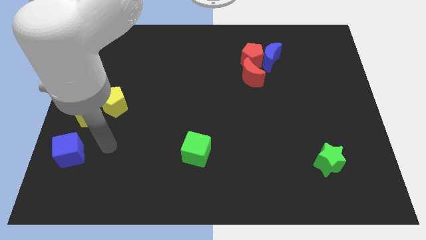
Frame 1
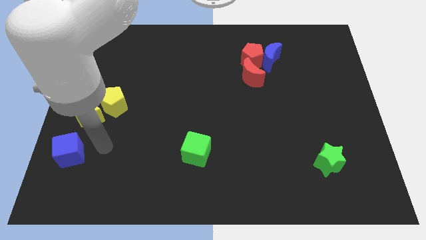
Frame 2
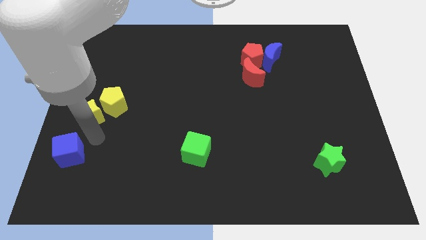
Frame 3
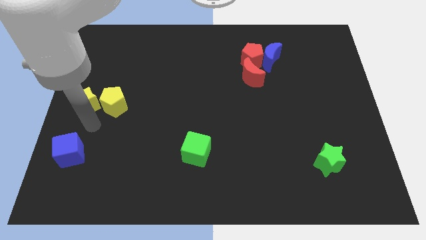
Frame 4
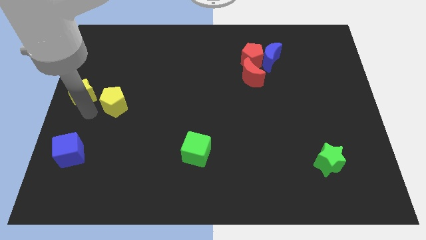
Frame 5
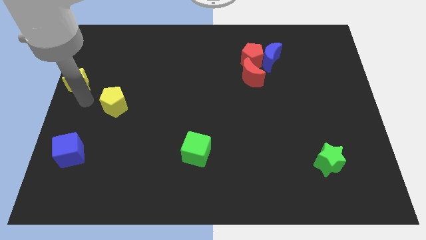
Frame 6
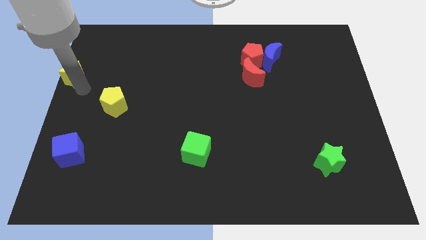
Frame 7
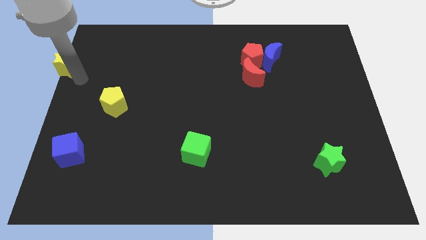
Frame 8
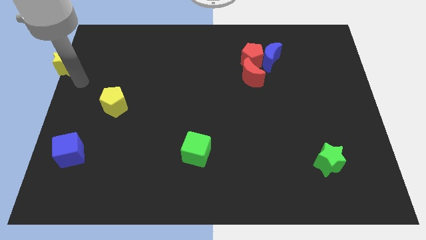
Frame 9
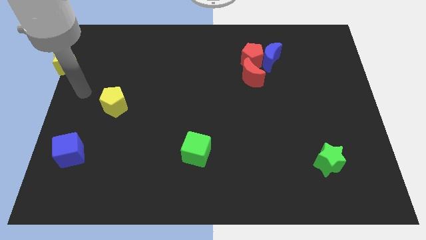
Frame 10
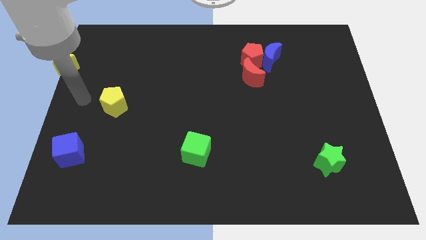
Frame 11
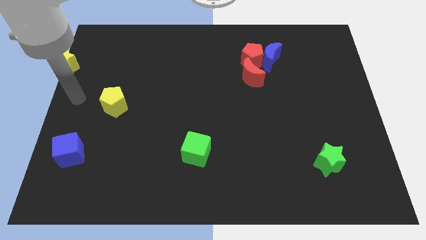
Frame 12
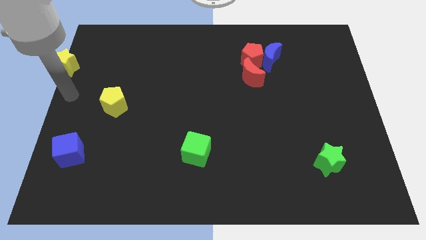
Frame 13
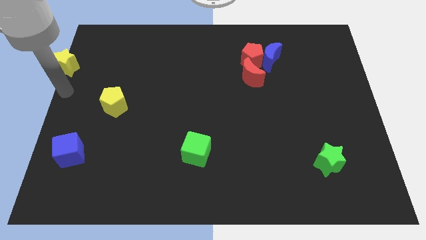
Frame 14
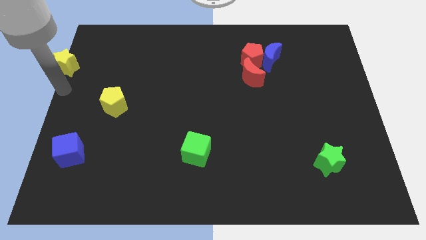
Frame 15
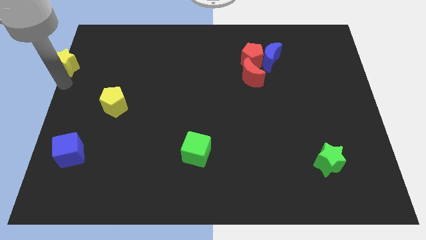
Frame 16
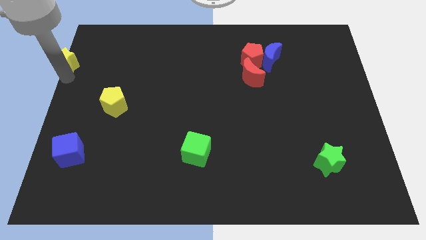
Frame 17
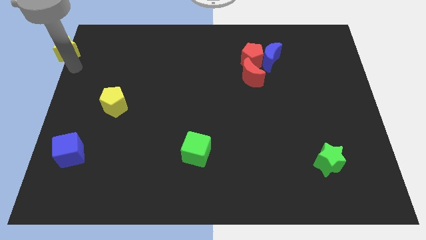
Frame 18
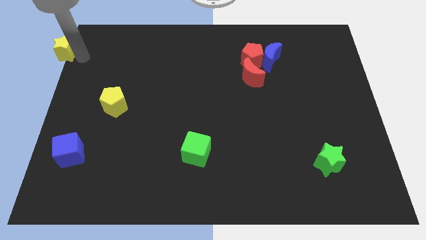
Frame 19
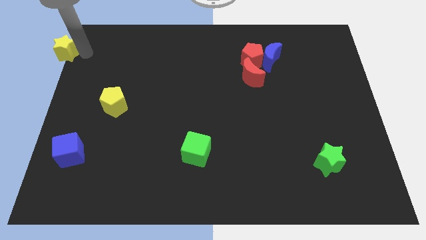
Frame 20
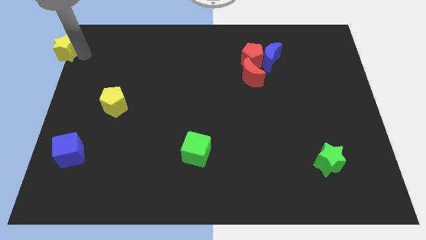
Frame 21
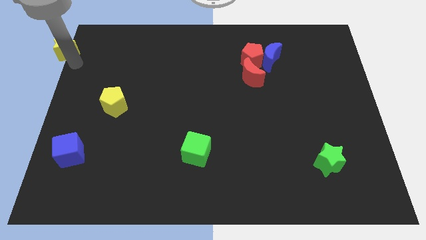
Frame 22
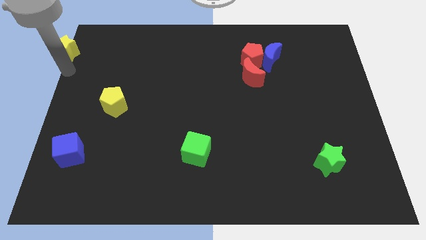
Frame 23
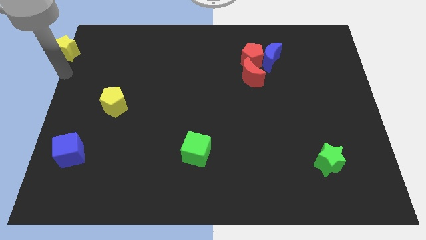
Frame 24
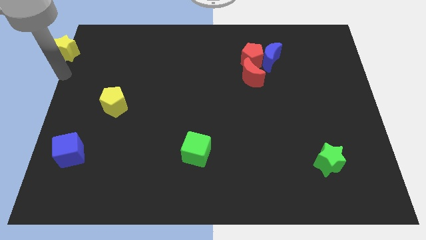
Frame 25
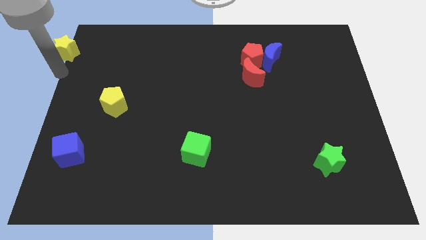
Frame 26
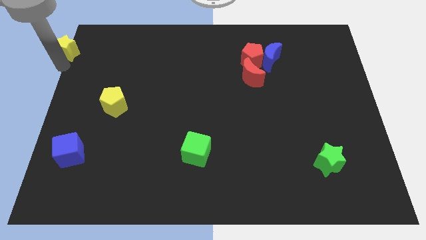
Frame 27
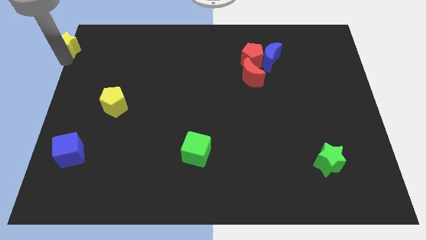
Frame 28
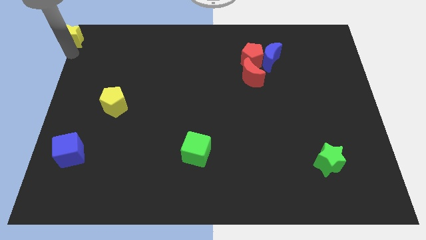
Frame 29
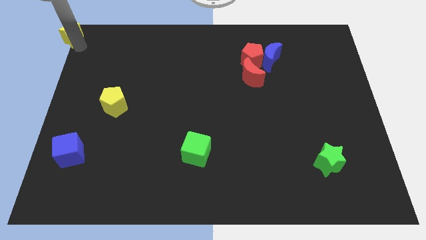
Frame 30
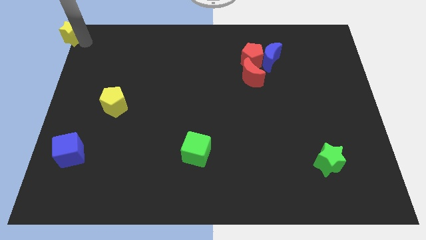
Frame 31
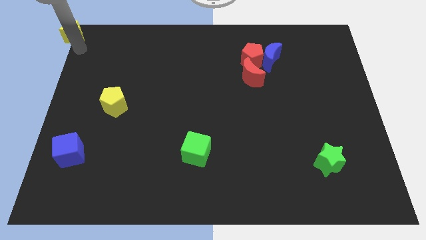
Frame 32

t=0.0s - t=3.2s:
push the yellow star towards the top left corner of the board

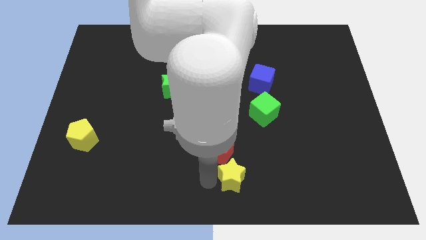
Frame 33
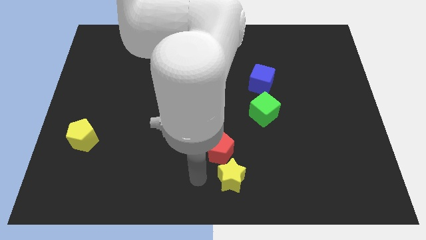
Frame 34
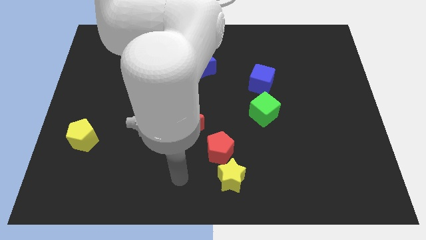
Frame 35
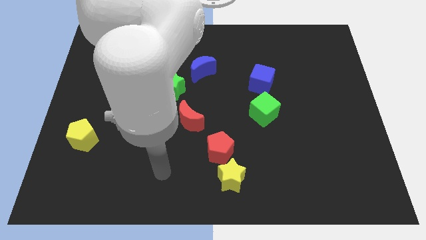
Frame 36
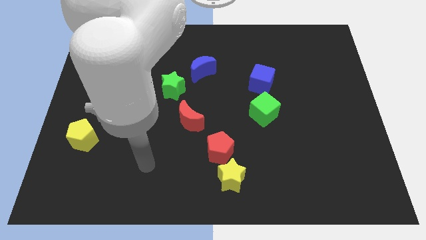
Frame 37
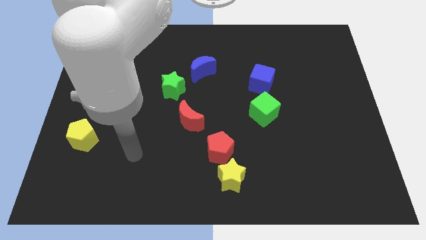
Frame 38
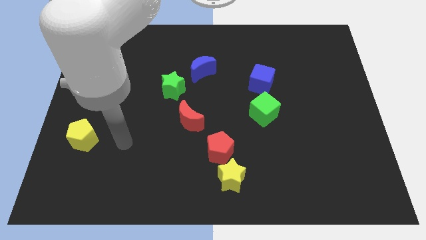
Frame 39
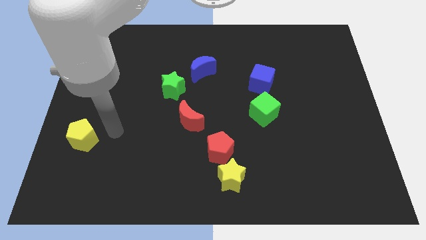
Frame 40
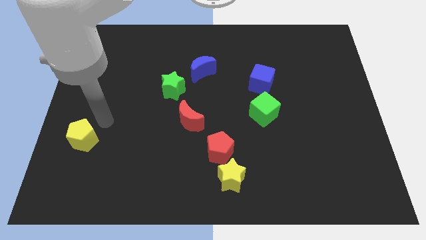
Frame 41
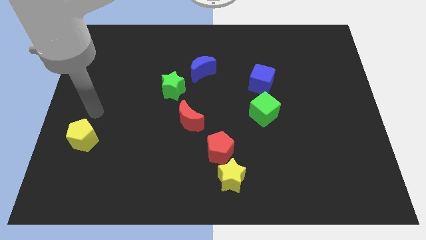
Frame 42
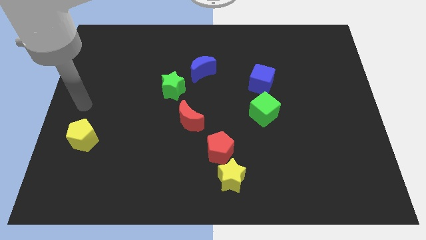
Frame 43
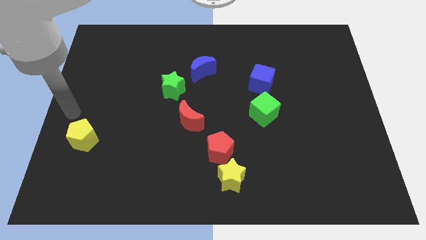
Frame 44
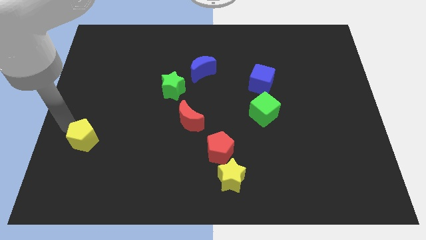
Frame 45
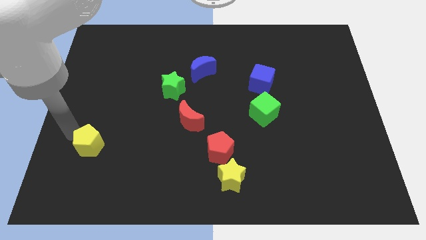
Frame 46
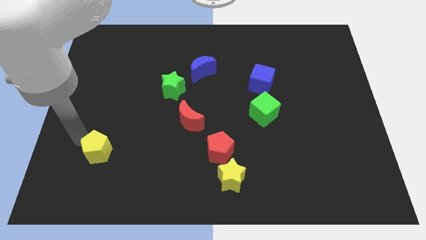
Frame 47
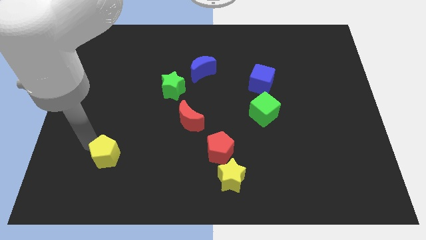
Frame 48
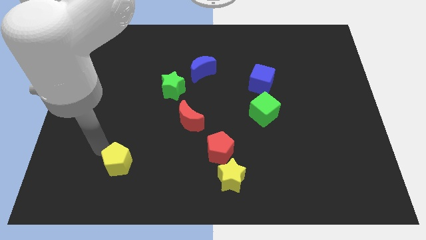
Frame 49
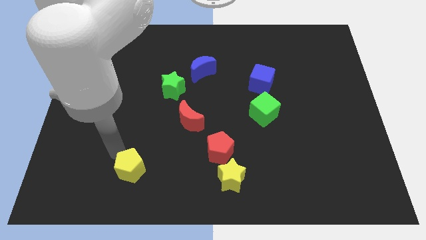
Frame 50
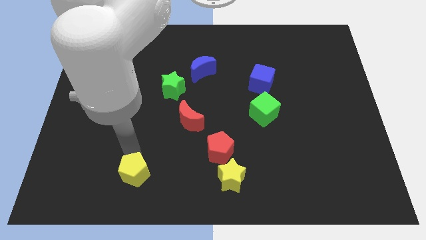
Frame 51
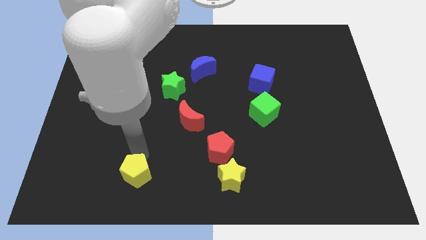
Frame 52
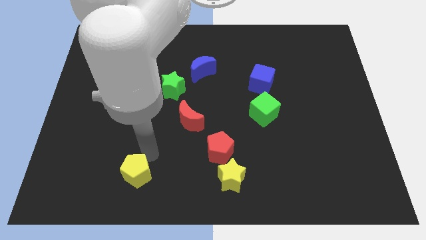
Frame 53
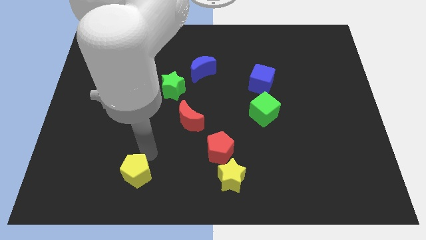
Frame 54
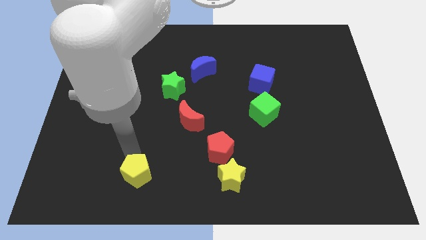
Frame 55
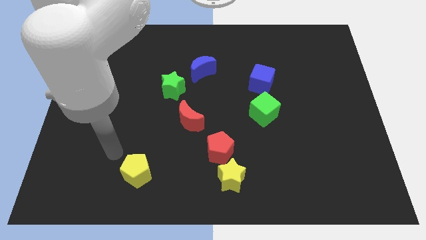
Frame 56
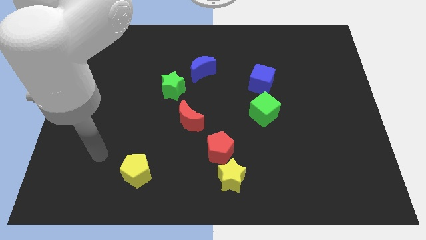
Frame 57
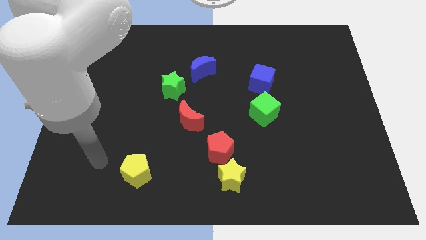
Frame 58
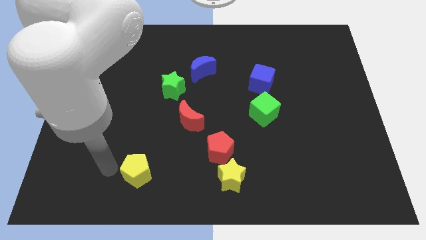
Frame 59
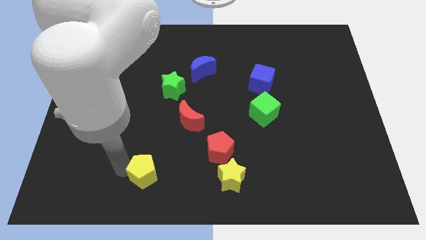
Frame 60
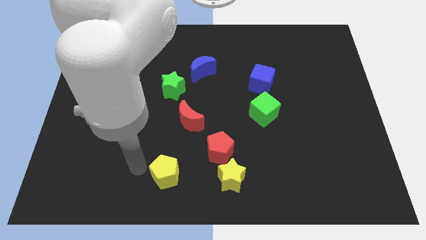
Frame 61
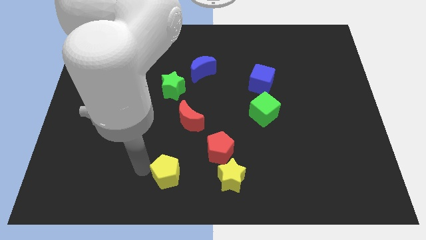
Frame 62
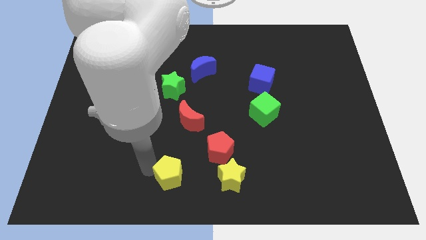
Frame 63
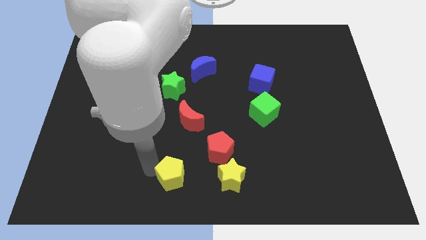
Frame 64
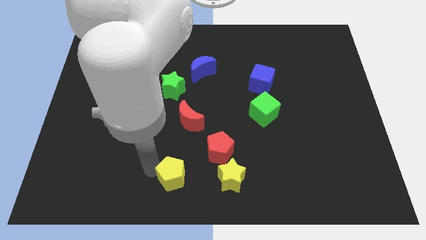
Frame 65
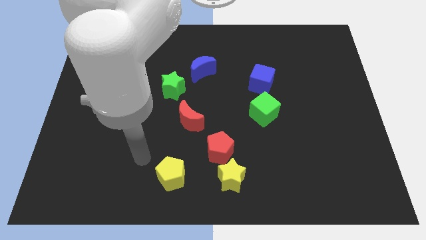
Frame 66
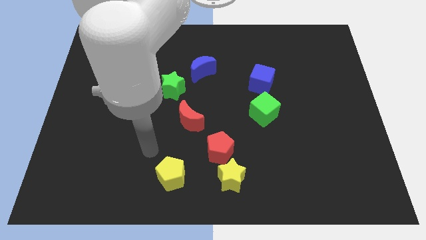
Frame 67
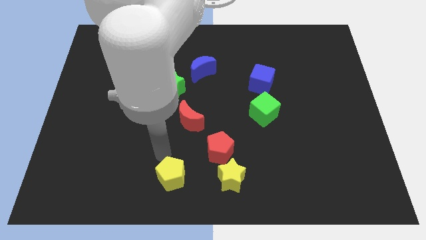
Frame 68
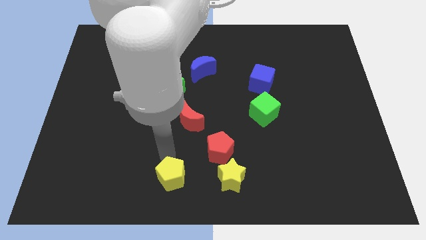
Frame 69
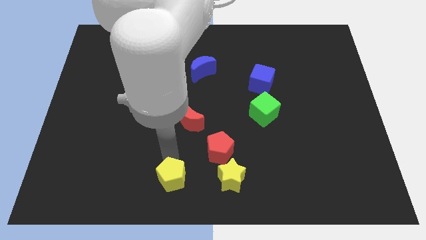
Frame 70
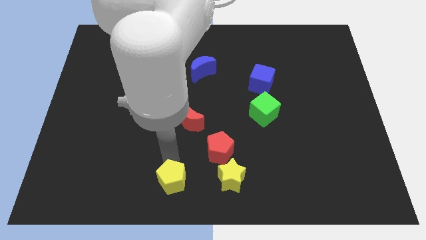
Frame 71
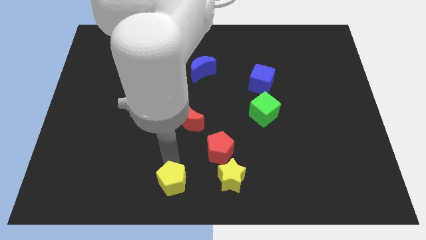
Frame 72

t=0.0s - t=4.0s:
put the yellow pentagon left to the yellow star

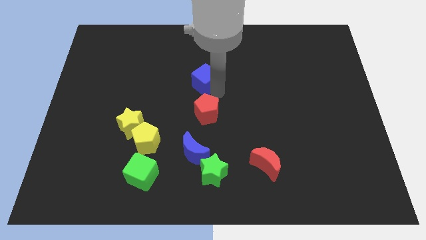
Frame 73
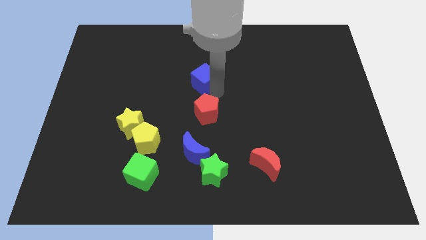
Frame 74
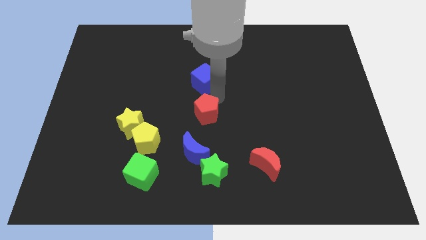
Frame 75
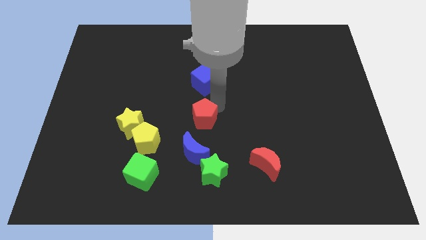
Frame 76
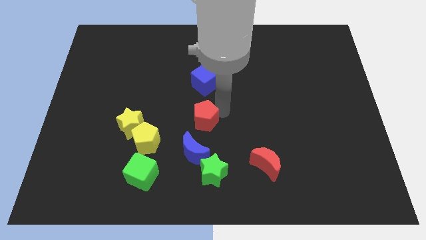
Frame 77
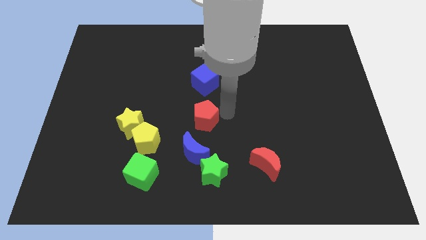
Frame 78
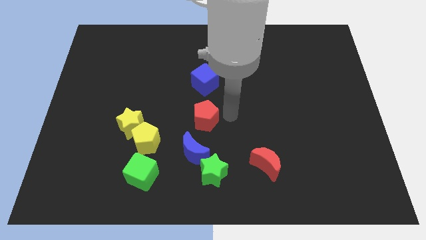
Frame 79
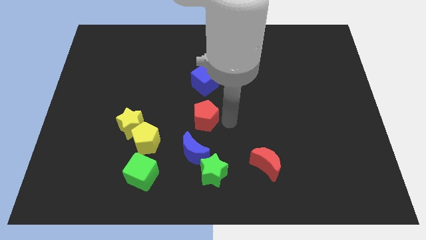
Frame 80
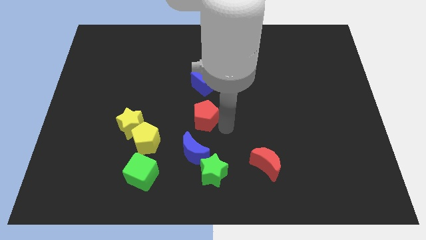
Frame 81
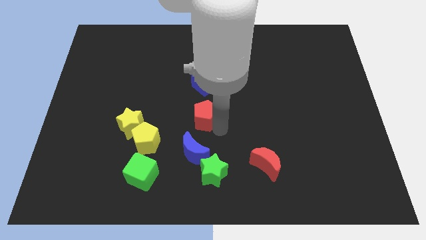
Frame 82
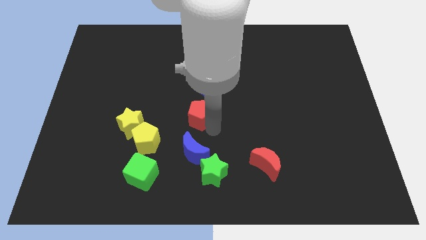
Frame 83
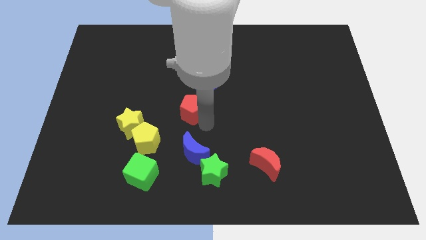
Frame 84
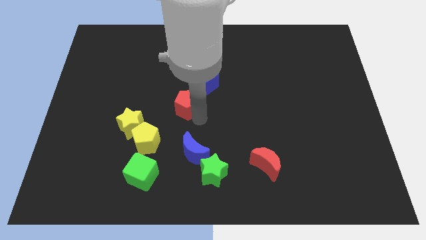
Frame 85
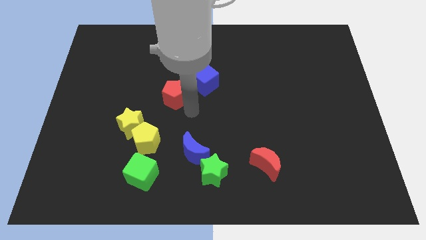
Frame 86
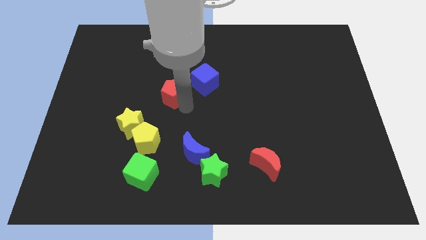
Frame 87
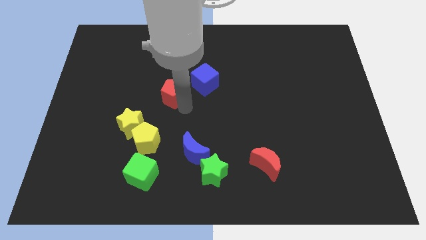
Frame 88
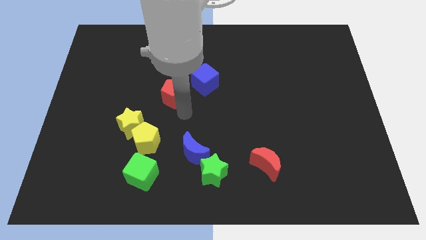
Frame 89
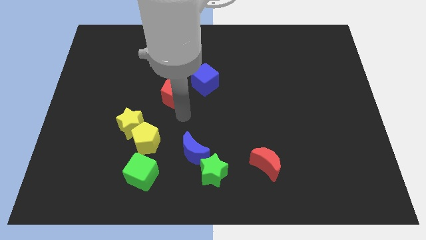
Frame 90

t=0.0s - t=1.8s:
place red pentagon beside blue cube
